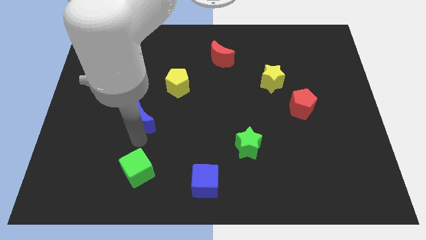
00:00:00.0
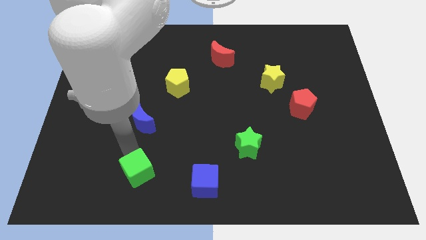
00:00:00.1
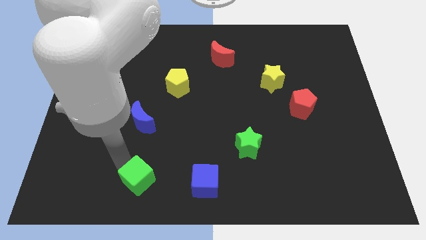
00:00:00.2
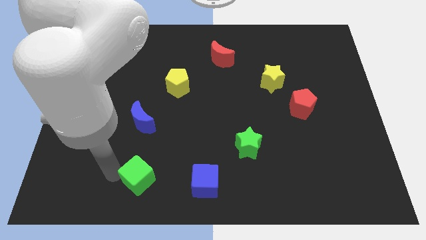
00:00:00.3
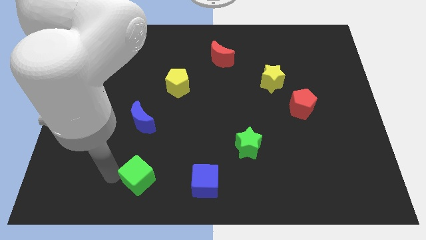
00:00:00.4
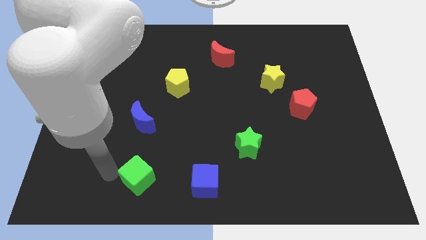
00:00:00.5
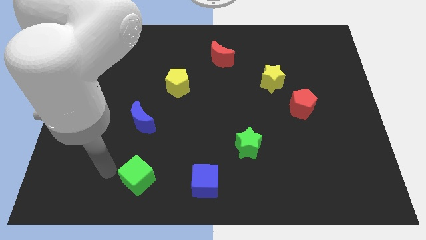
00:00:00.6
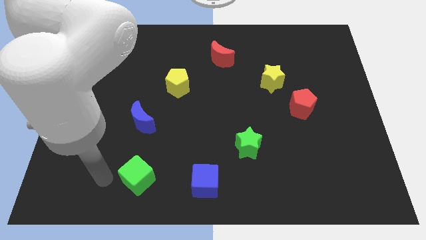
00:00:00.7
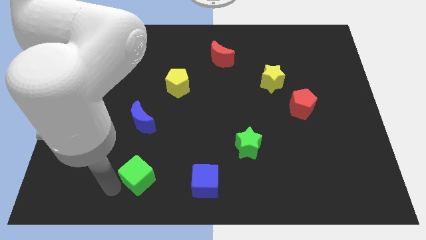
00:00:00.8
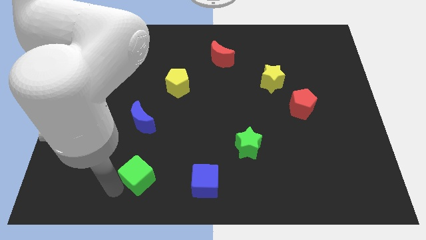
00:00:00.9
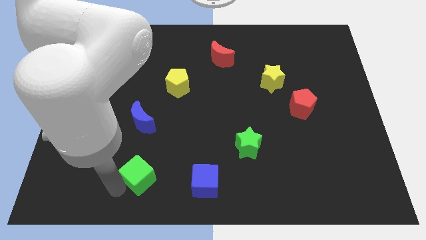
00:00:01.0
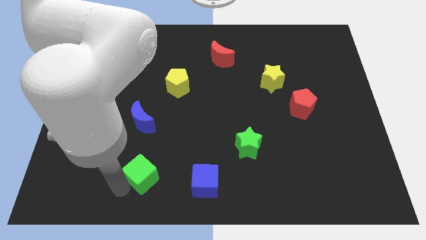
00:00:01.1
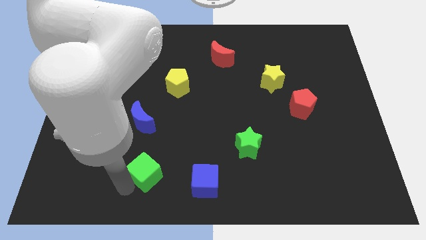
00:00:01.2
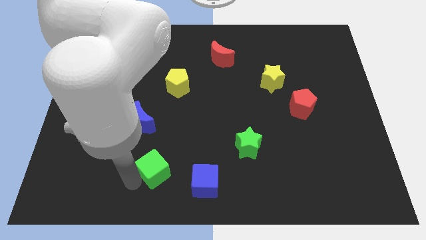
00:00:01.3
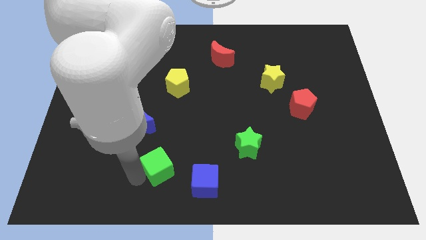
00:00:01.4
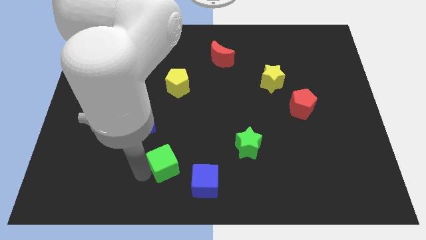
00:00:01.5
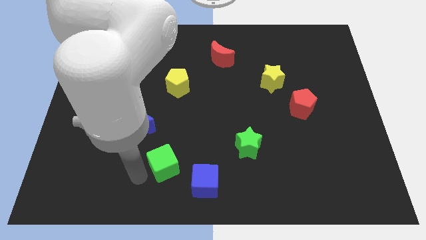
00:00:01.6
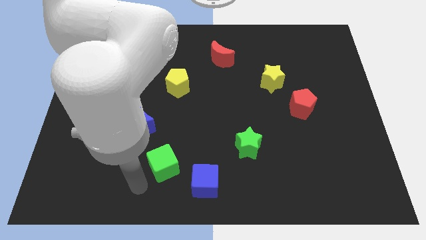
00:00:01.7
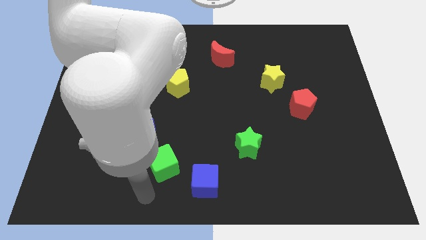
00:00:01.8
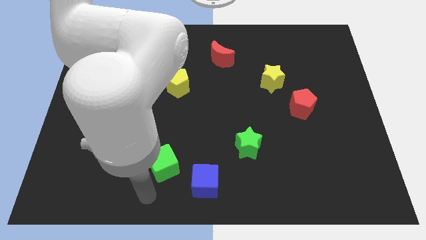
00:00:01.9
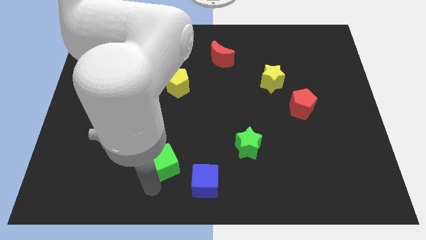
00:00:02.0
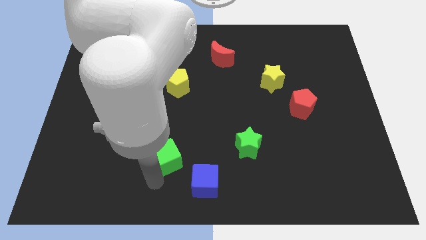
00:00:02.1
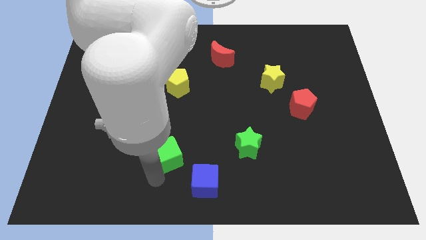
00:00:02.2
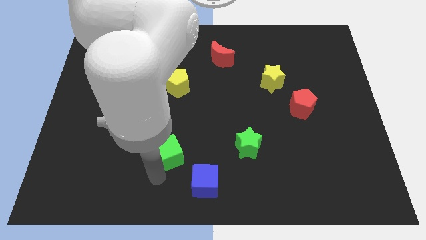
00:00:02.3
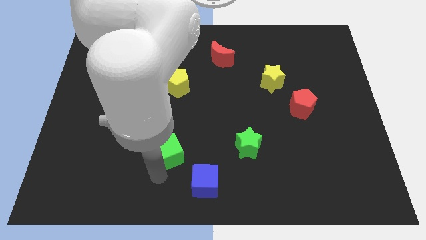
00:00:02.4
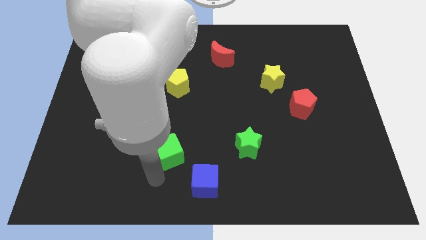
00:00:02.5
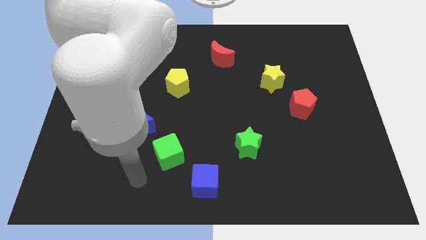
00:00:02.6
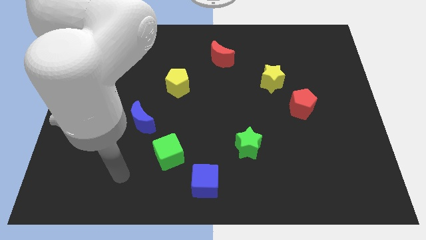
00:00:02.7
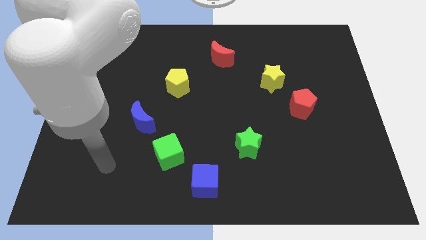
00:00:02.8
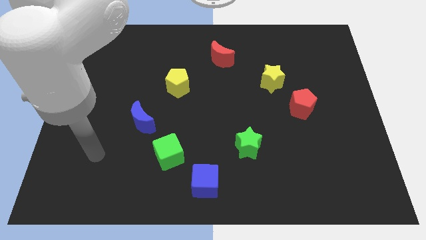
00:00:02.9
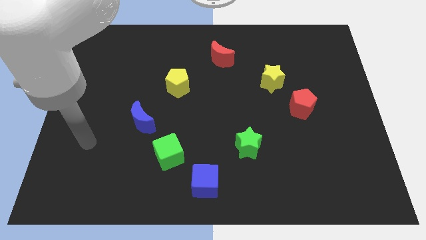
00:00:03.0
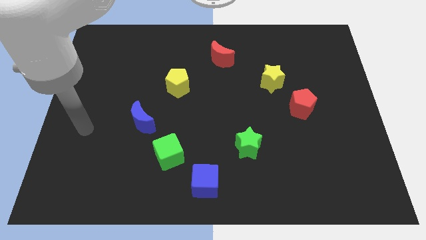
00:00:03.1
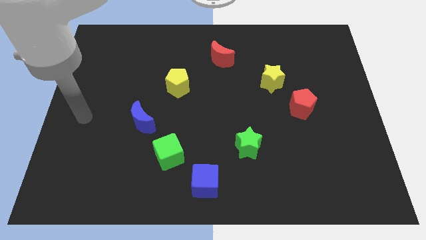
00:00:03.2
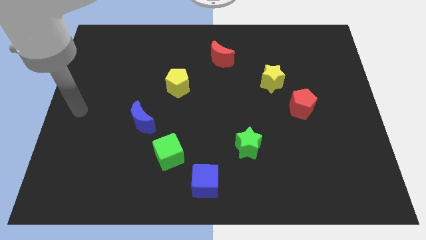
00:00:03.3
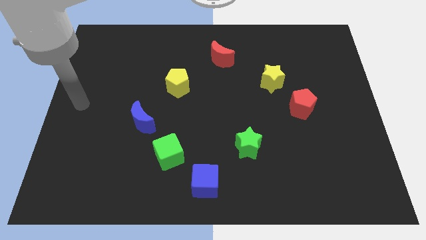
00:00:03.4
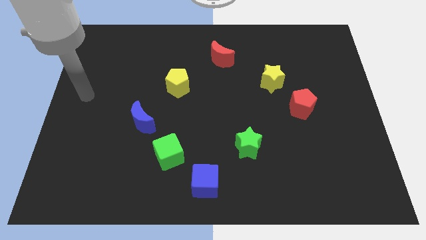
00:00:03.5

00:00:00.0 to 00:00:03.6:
place the green cube in between the blue blocks

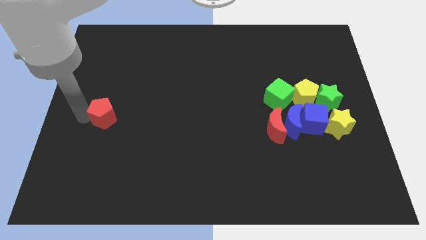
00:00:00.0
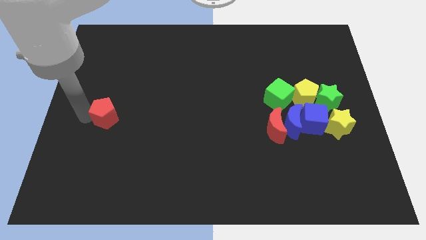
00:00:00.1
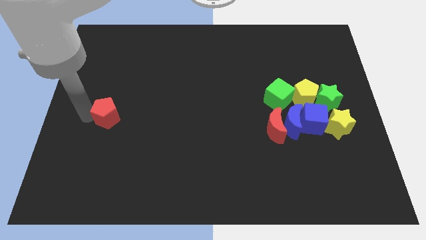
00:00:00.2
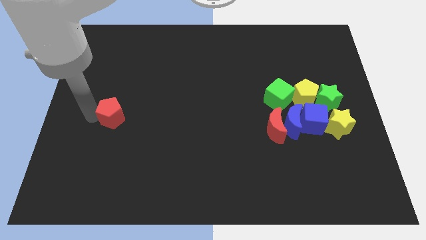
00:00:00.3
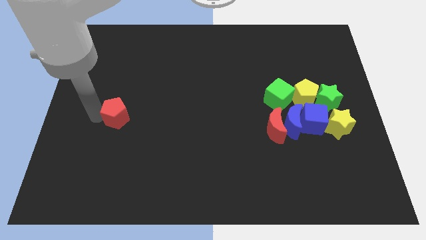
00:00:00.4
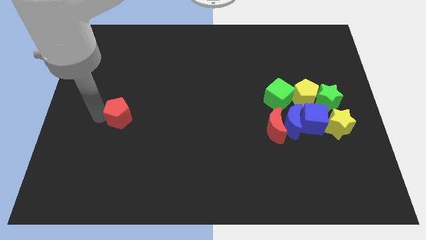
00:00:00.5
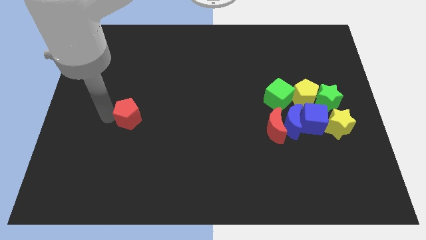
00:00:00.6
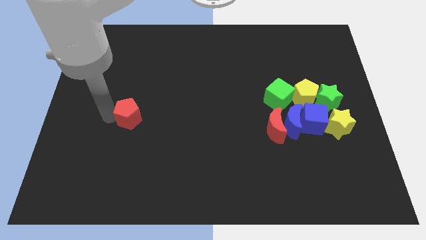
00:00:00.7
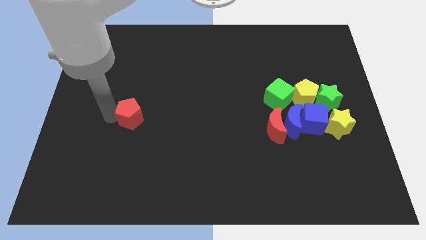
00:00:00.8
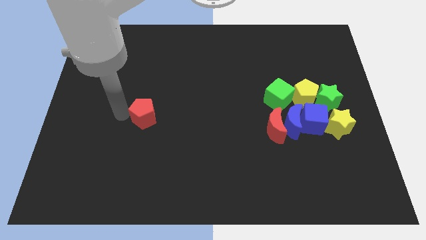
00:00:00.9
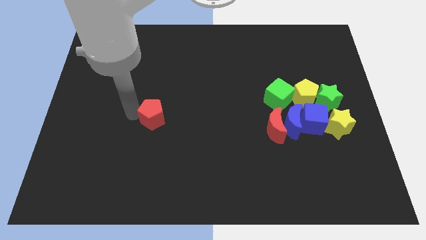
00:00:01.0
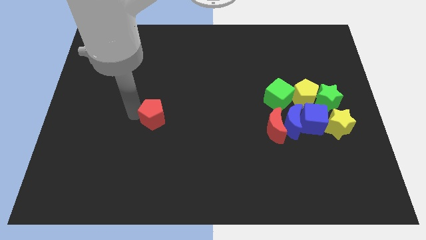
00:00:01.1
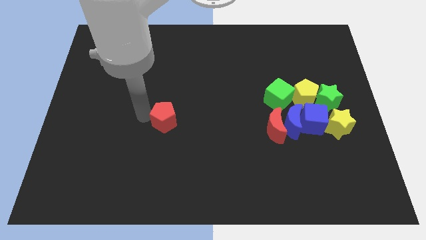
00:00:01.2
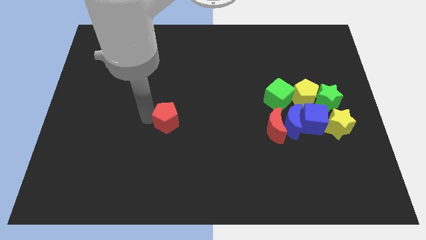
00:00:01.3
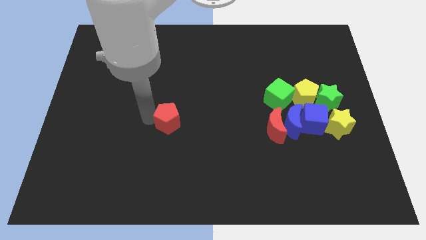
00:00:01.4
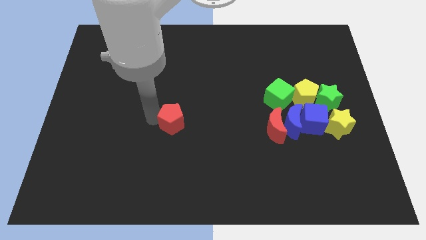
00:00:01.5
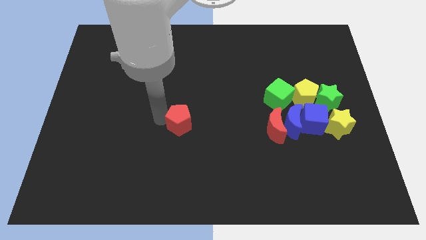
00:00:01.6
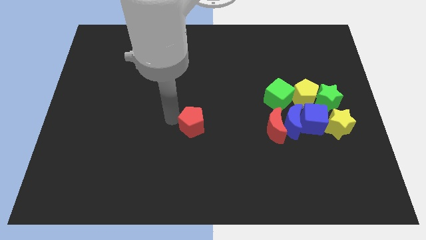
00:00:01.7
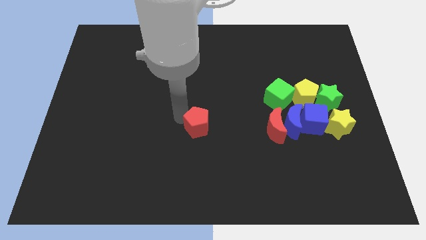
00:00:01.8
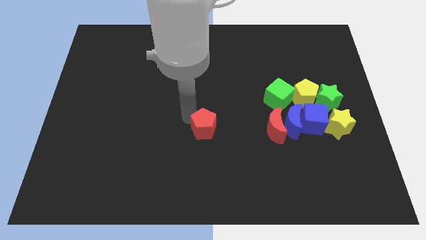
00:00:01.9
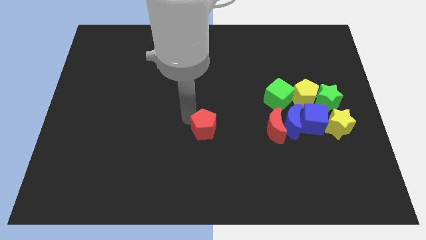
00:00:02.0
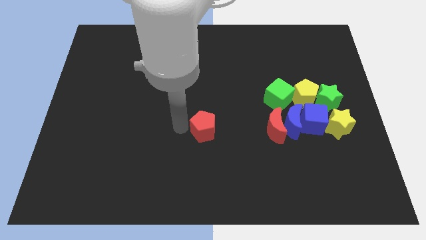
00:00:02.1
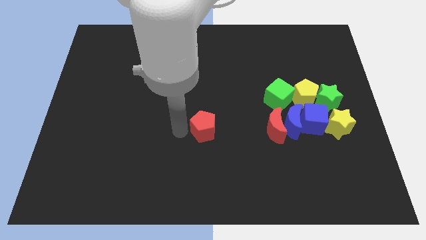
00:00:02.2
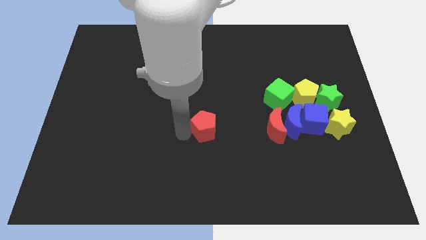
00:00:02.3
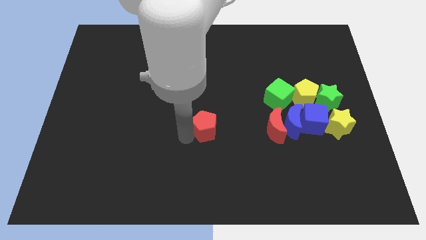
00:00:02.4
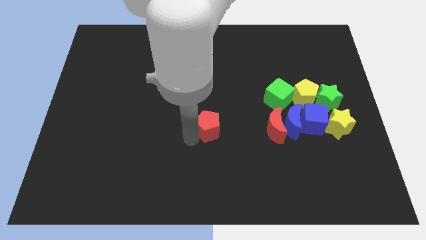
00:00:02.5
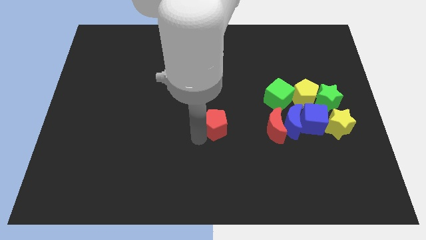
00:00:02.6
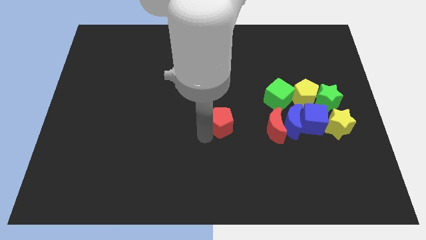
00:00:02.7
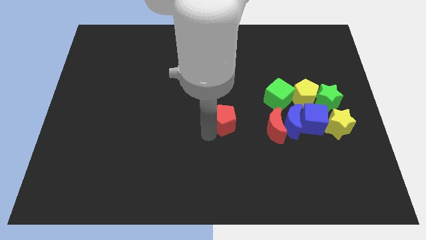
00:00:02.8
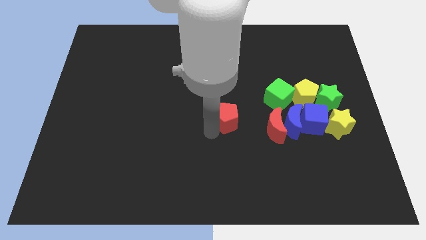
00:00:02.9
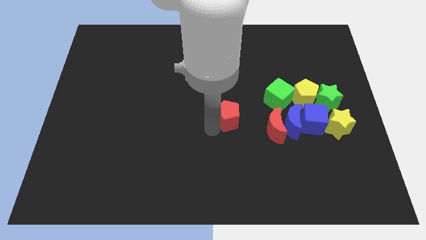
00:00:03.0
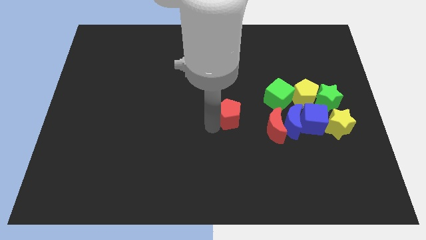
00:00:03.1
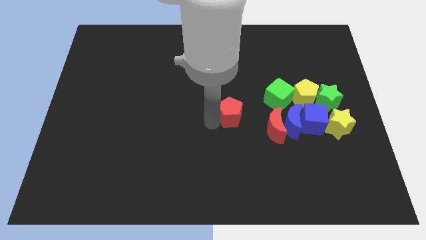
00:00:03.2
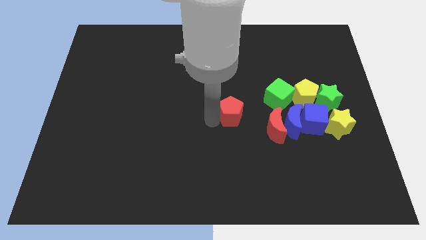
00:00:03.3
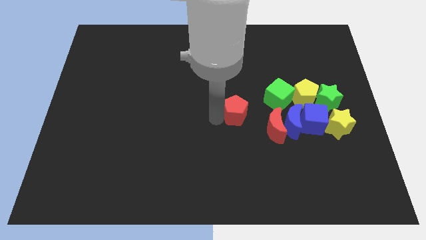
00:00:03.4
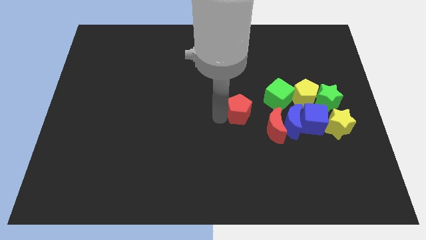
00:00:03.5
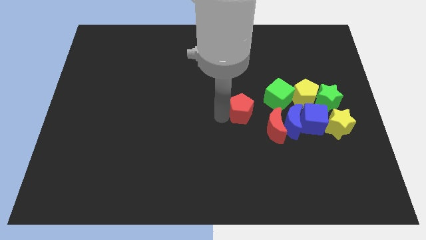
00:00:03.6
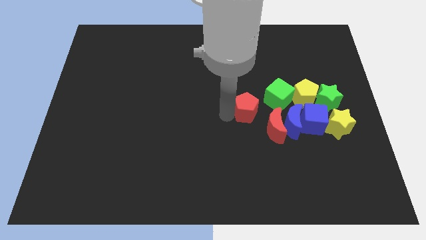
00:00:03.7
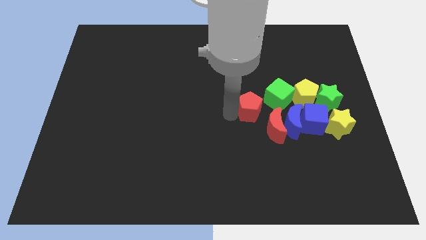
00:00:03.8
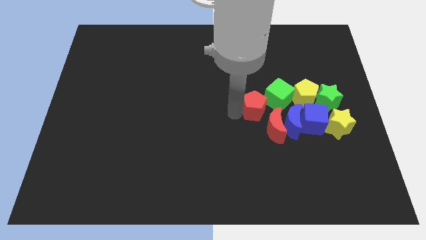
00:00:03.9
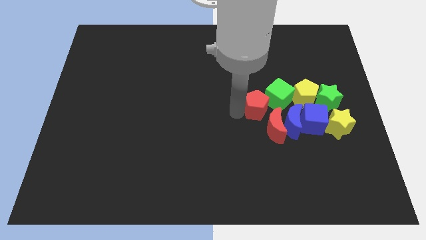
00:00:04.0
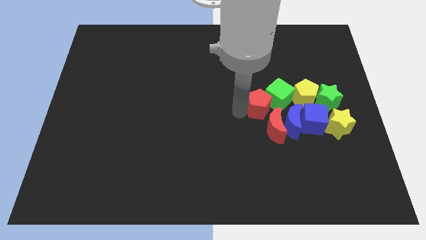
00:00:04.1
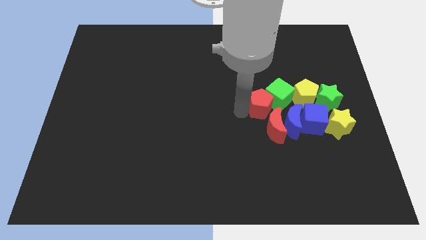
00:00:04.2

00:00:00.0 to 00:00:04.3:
drag red pentagon into the group of blocks

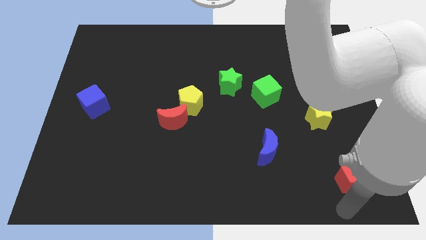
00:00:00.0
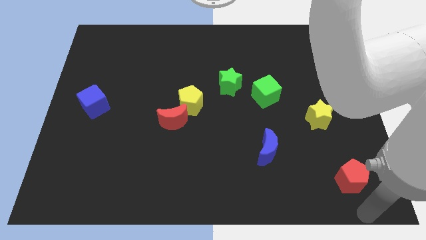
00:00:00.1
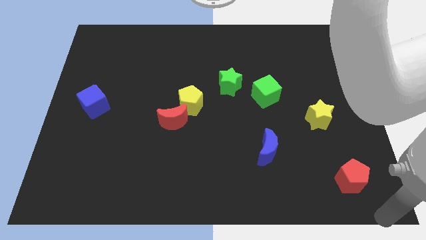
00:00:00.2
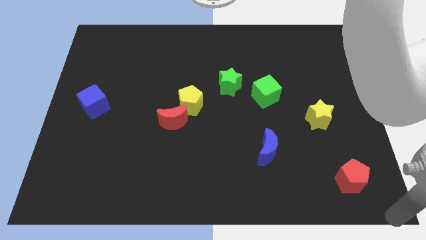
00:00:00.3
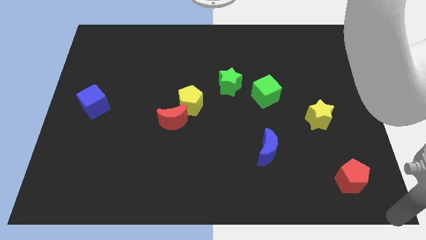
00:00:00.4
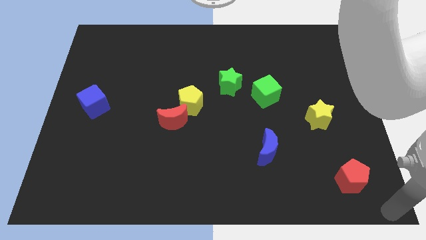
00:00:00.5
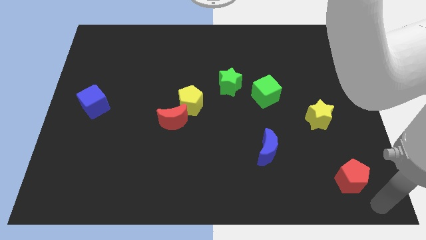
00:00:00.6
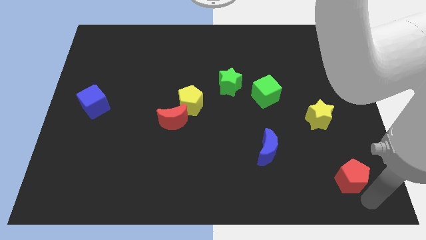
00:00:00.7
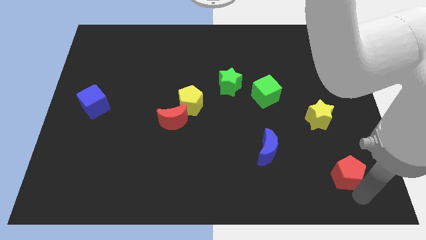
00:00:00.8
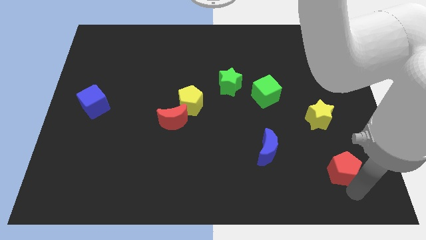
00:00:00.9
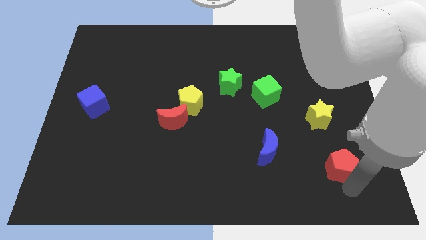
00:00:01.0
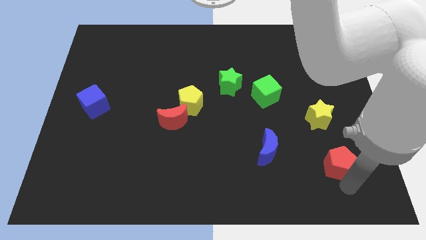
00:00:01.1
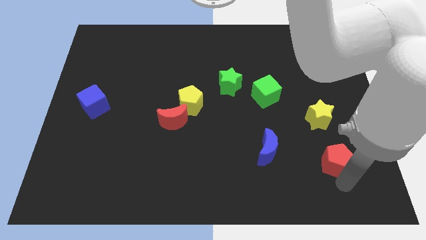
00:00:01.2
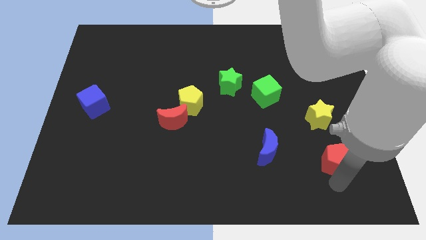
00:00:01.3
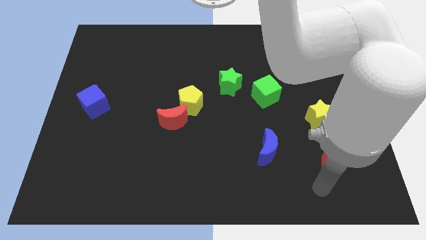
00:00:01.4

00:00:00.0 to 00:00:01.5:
push red pentagon towards yellow star
